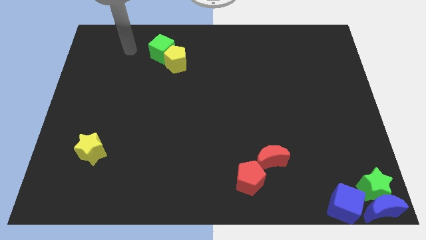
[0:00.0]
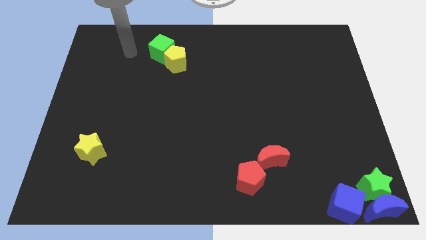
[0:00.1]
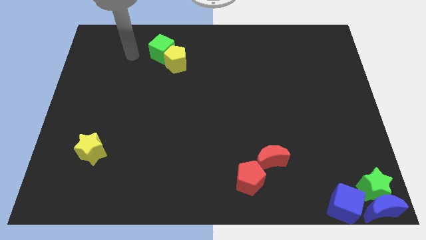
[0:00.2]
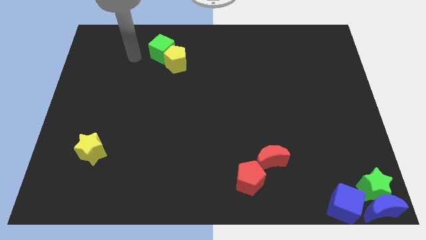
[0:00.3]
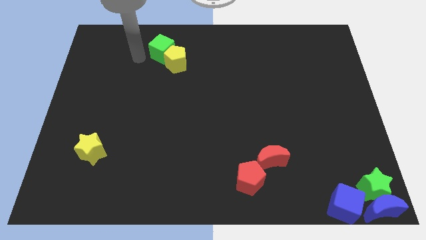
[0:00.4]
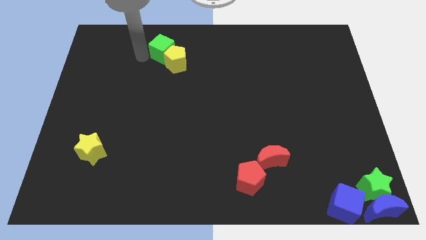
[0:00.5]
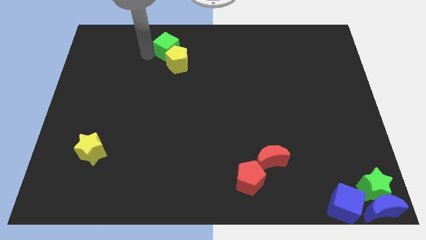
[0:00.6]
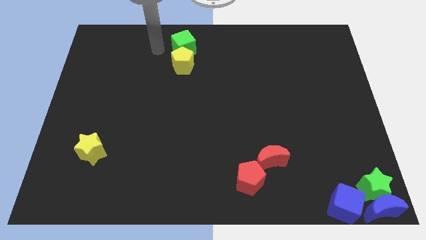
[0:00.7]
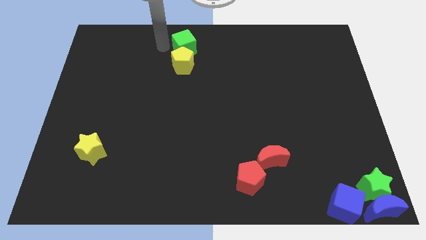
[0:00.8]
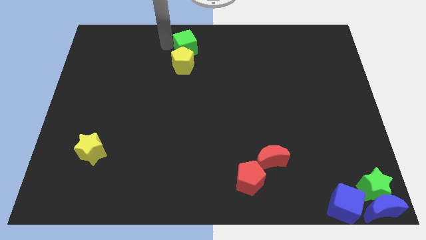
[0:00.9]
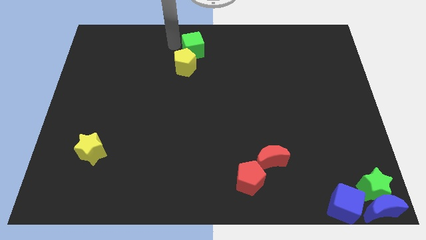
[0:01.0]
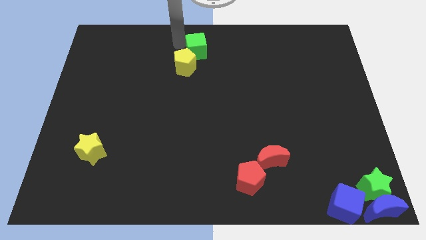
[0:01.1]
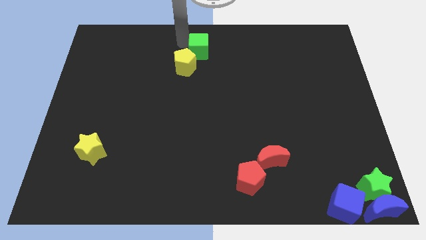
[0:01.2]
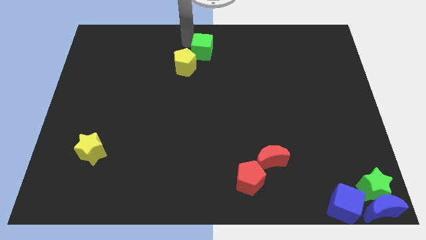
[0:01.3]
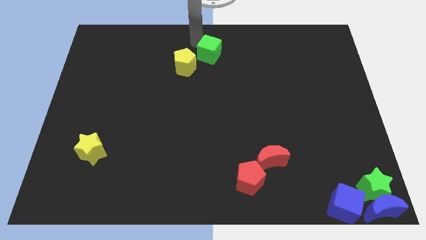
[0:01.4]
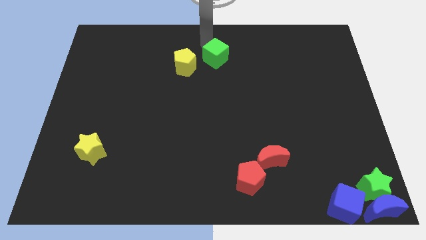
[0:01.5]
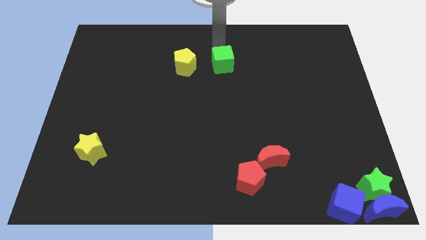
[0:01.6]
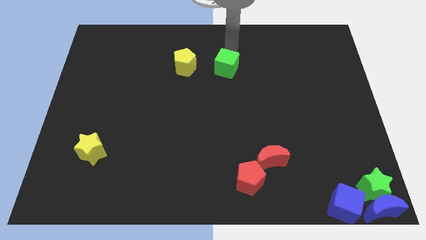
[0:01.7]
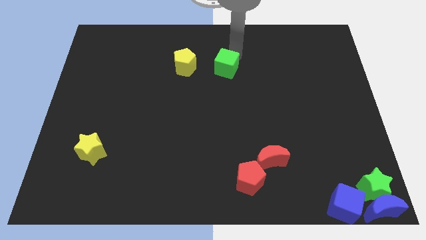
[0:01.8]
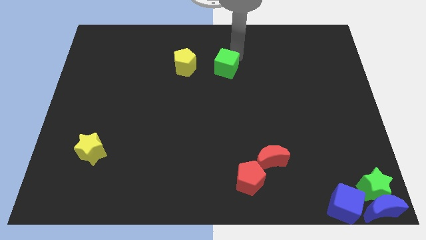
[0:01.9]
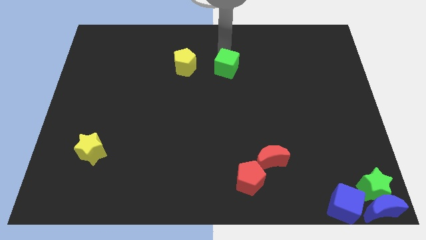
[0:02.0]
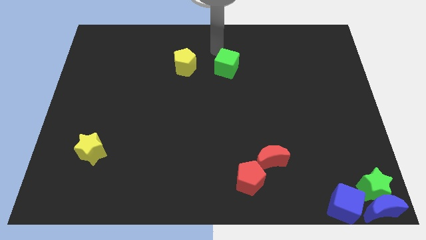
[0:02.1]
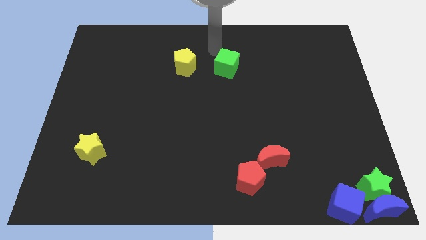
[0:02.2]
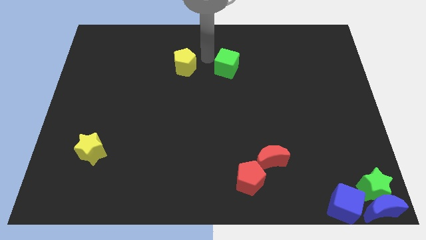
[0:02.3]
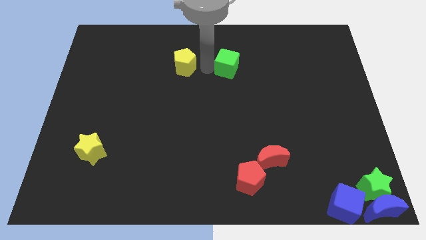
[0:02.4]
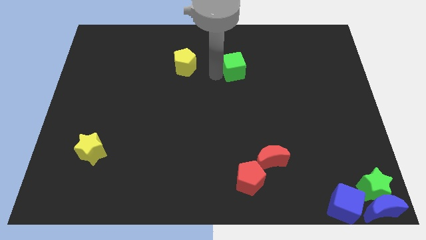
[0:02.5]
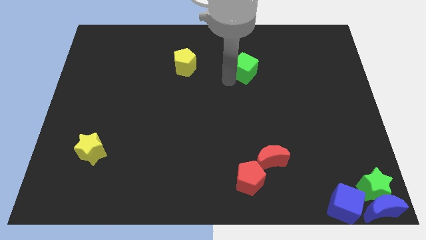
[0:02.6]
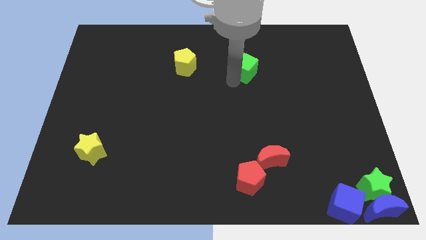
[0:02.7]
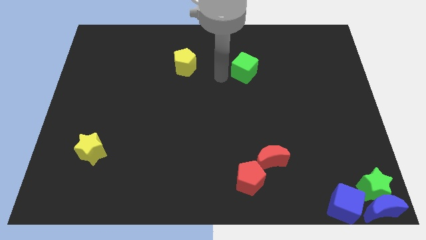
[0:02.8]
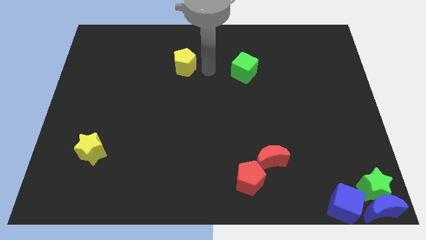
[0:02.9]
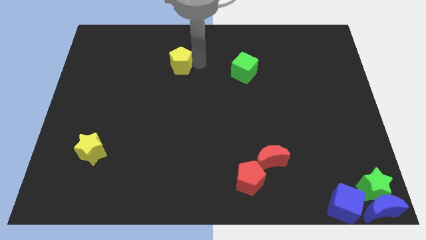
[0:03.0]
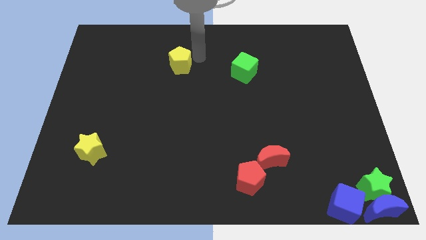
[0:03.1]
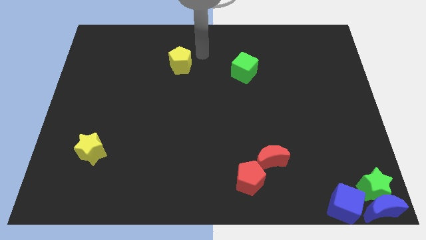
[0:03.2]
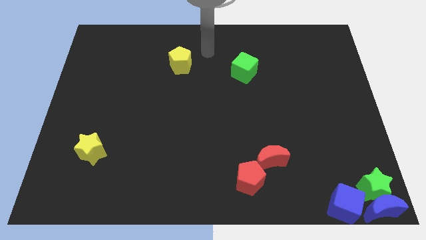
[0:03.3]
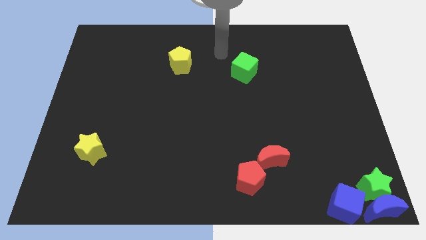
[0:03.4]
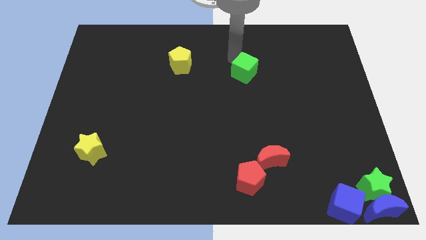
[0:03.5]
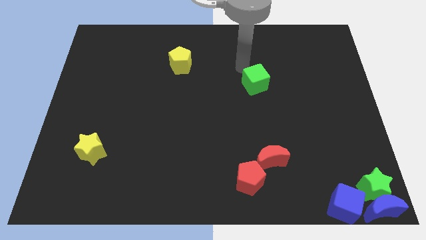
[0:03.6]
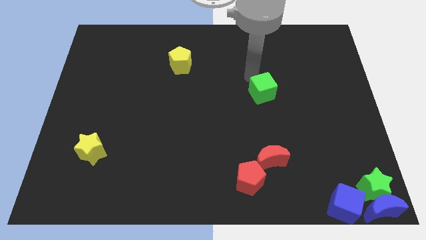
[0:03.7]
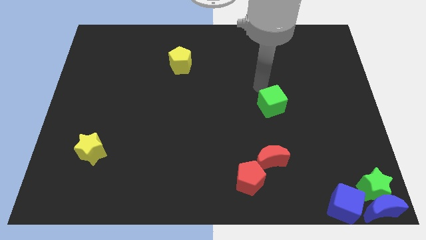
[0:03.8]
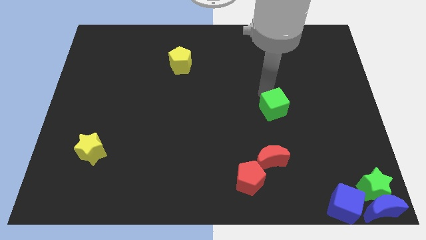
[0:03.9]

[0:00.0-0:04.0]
separate the green cube from the yellow pentagon

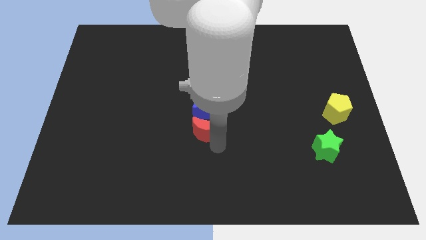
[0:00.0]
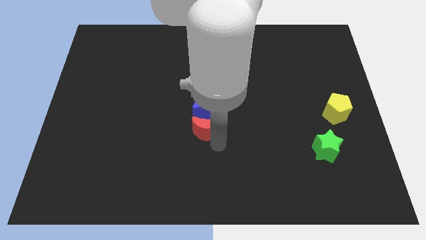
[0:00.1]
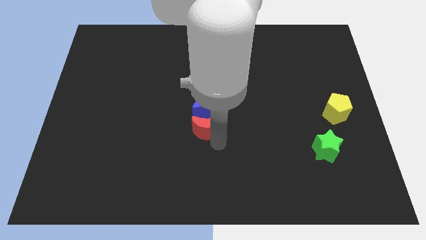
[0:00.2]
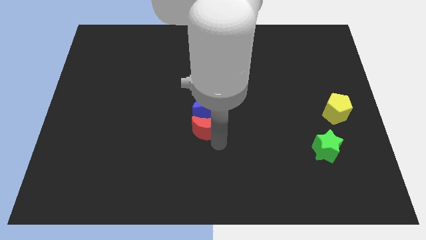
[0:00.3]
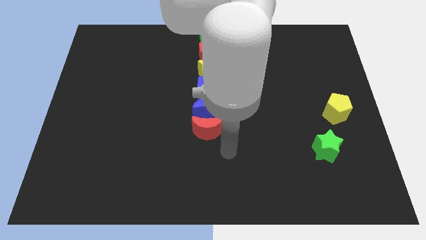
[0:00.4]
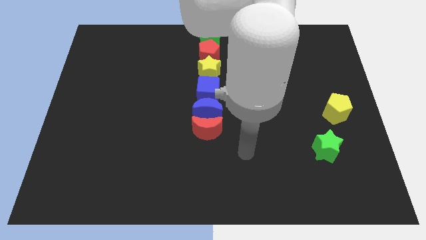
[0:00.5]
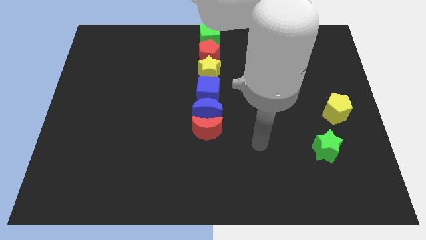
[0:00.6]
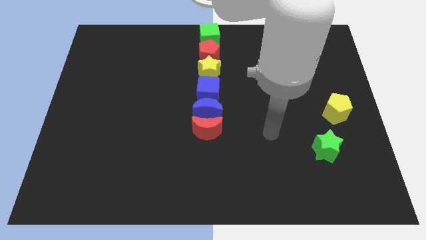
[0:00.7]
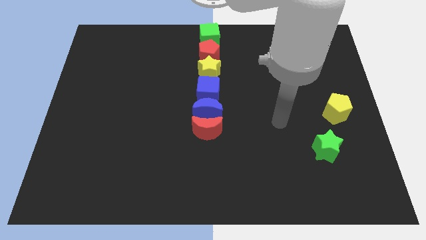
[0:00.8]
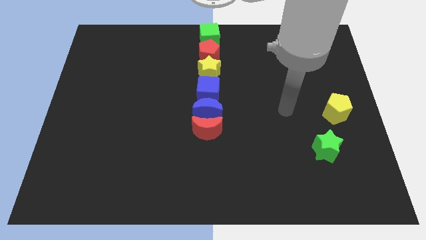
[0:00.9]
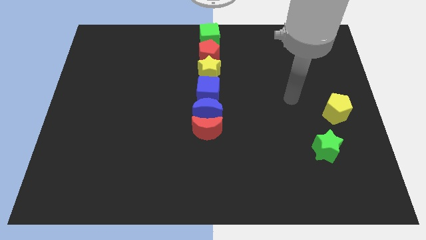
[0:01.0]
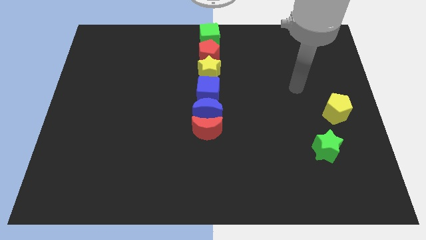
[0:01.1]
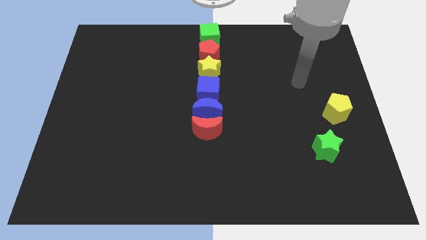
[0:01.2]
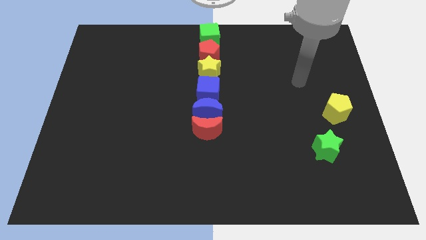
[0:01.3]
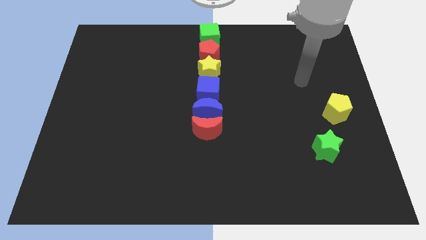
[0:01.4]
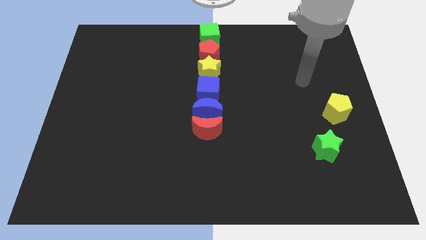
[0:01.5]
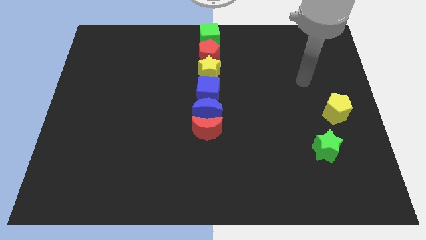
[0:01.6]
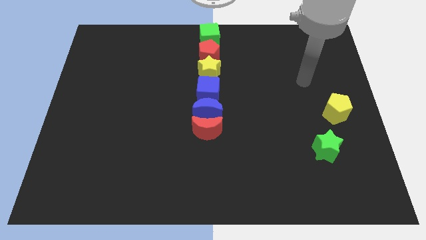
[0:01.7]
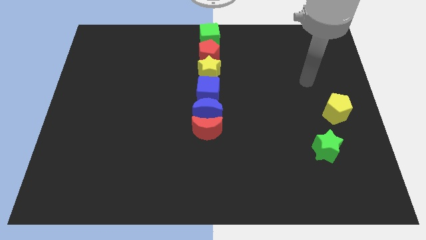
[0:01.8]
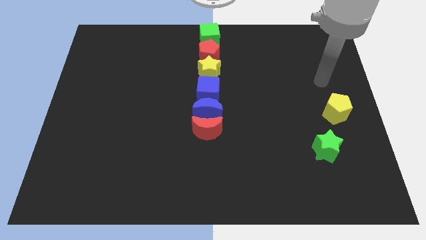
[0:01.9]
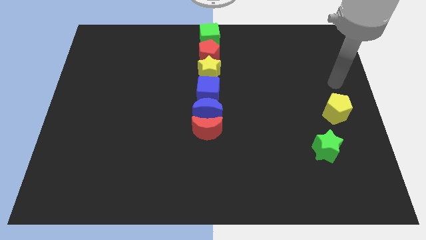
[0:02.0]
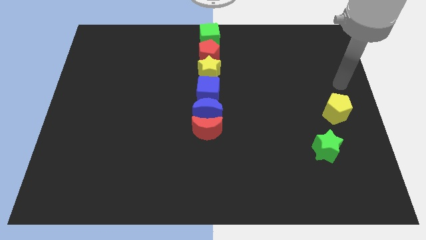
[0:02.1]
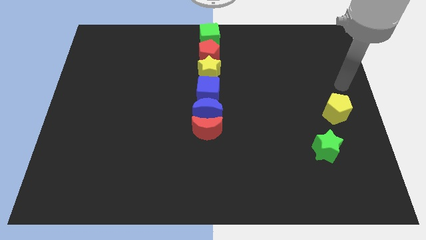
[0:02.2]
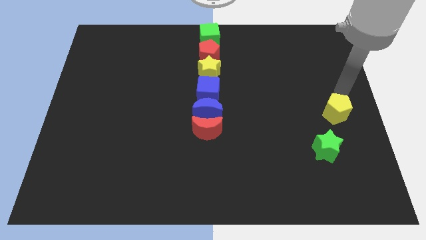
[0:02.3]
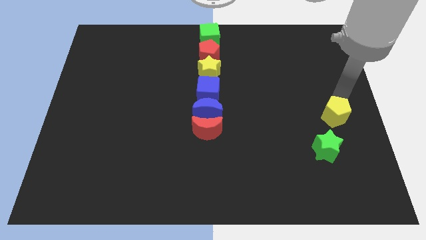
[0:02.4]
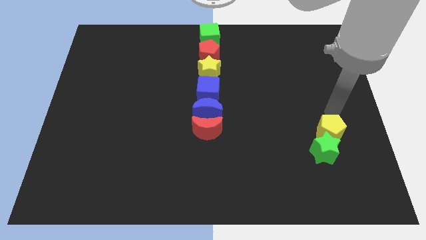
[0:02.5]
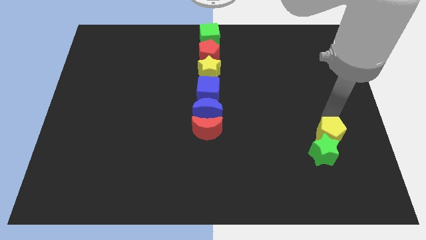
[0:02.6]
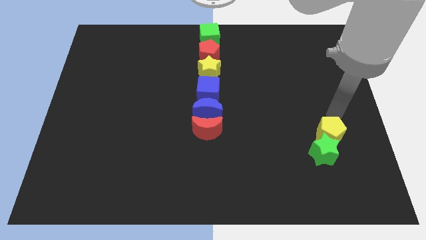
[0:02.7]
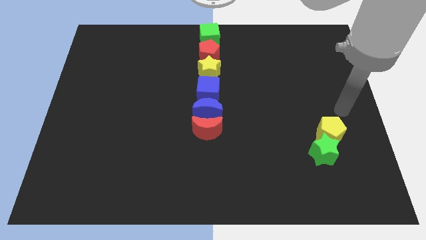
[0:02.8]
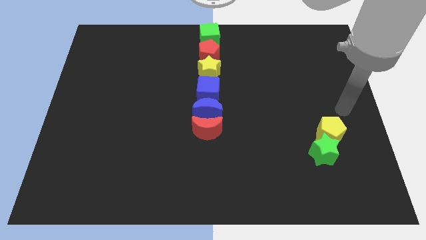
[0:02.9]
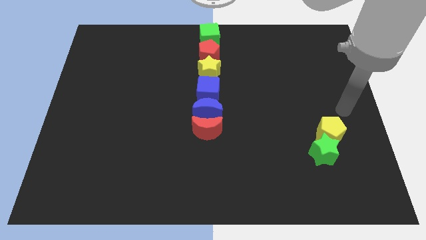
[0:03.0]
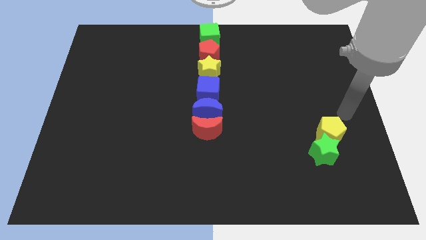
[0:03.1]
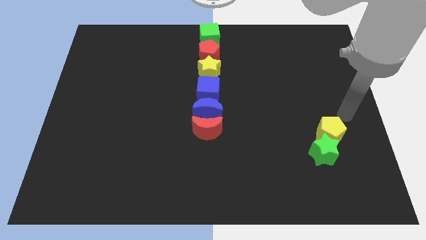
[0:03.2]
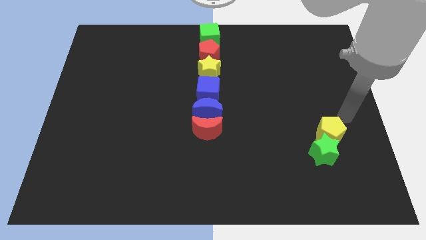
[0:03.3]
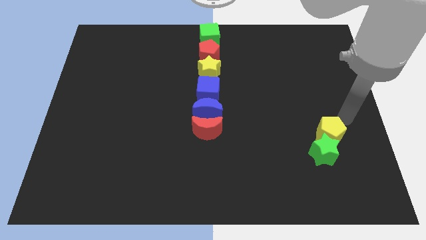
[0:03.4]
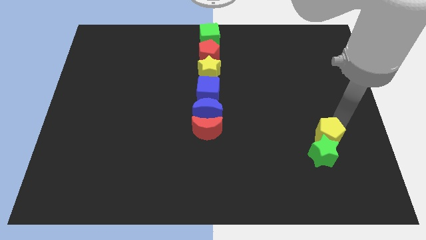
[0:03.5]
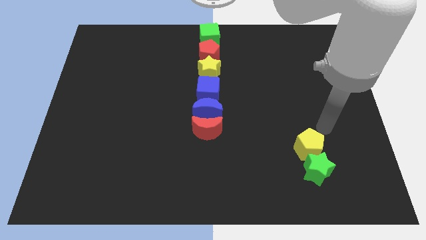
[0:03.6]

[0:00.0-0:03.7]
move the yellow pentagon into the green star

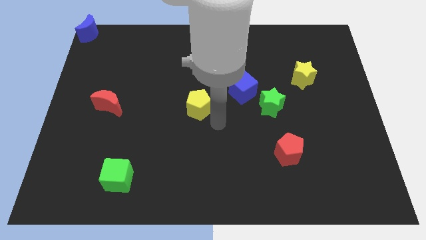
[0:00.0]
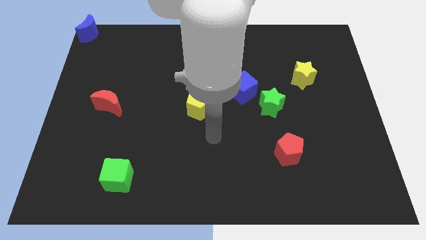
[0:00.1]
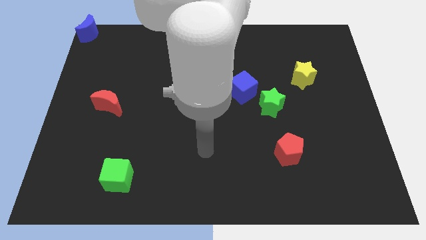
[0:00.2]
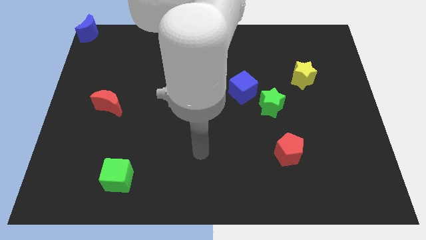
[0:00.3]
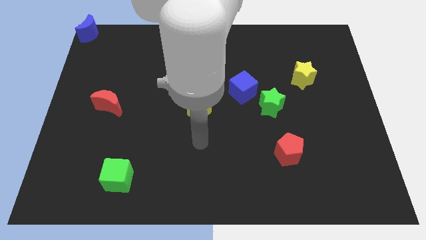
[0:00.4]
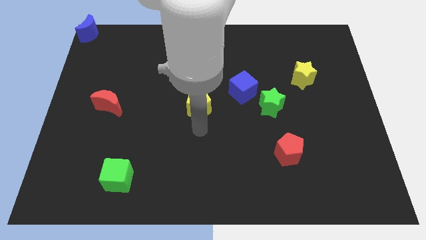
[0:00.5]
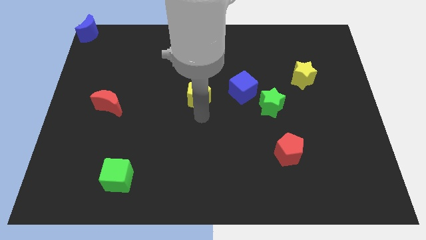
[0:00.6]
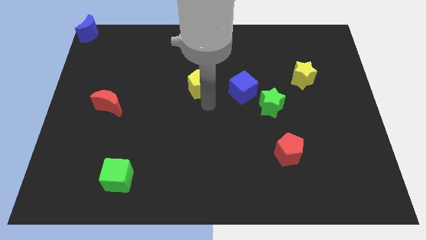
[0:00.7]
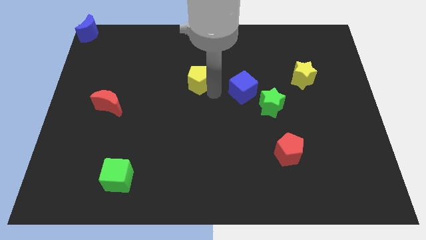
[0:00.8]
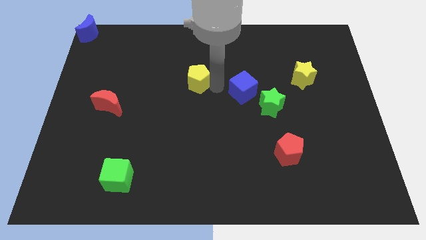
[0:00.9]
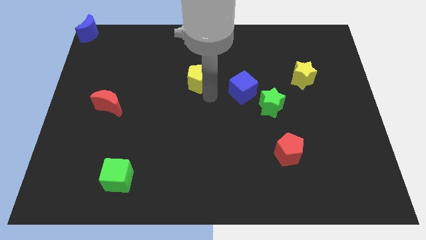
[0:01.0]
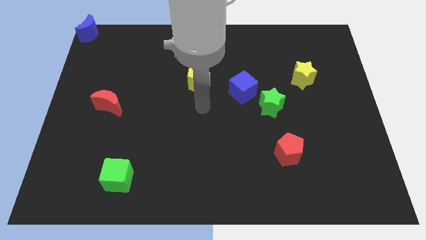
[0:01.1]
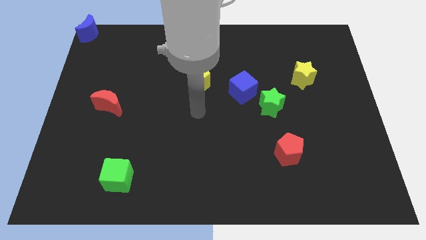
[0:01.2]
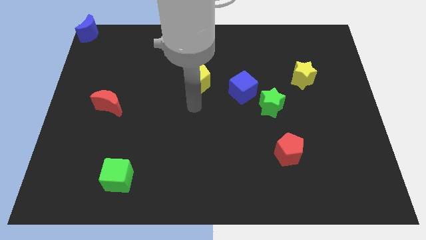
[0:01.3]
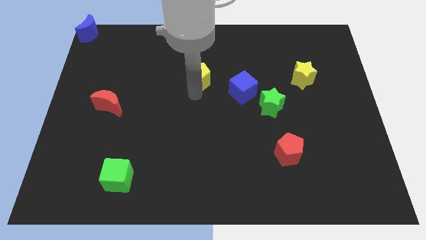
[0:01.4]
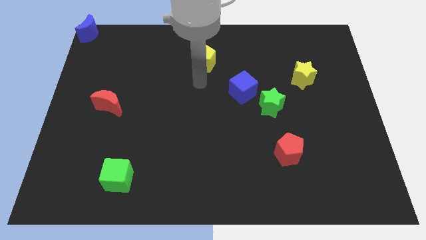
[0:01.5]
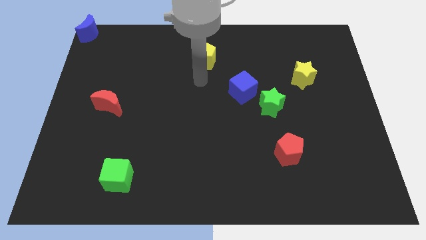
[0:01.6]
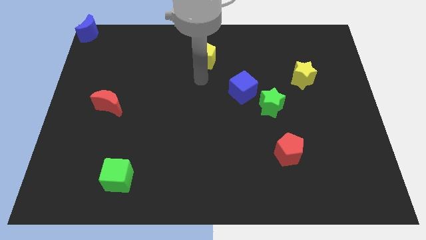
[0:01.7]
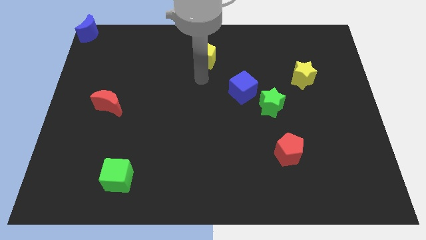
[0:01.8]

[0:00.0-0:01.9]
slide the yellow pentagon diagonally top left to the blue cube
